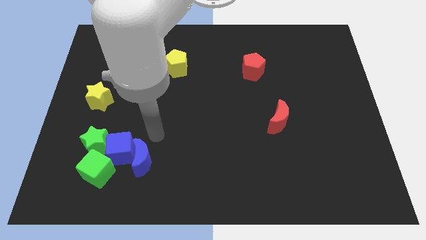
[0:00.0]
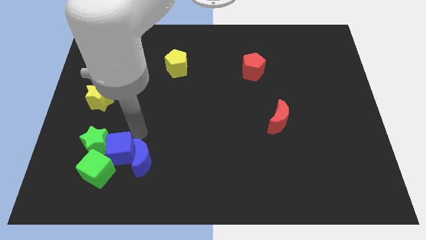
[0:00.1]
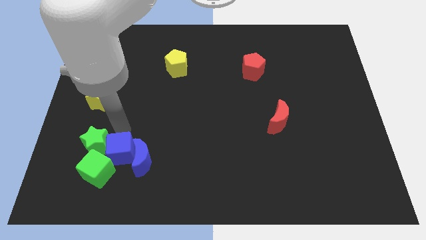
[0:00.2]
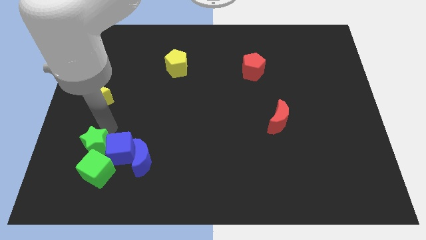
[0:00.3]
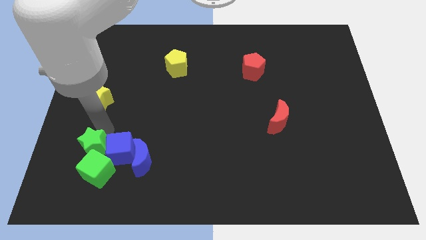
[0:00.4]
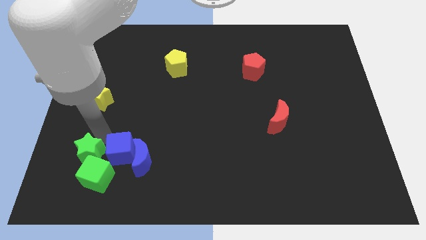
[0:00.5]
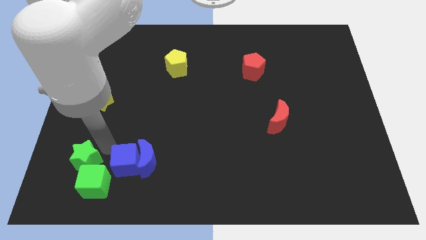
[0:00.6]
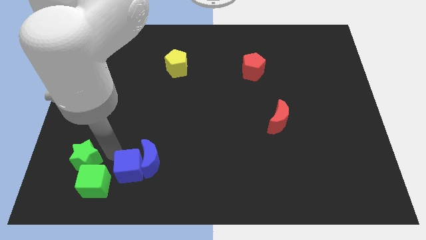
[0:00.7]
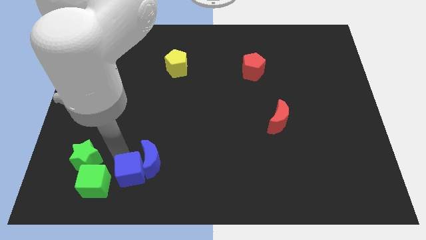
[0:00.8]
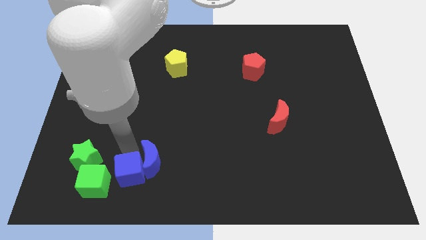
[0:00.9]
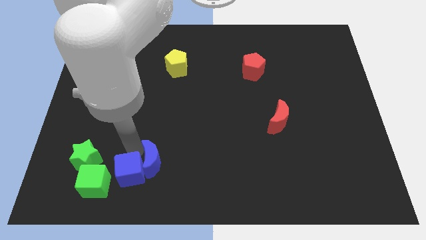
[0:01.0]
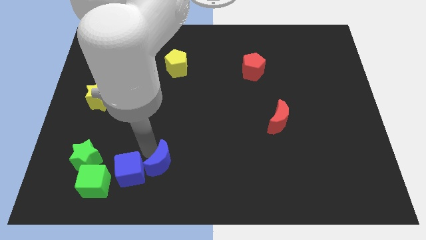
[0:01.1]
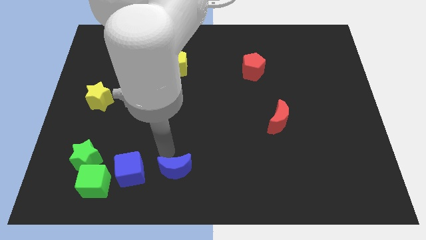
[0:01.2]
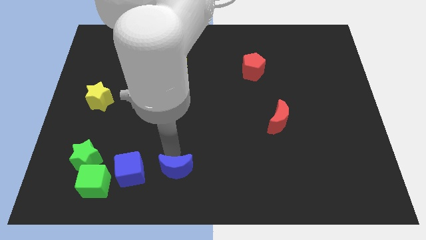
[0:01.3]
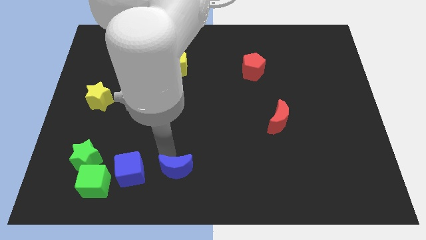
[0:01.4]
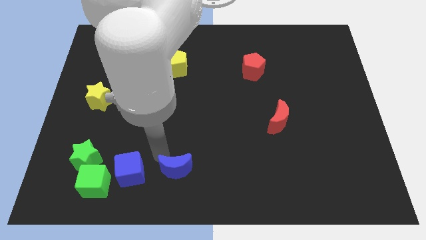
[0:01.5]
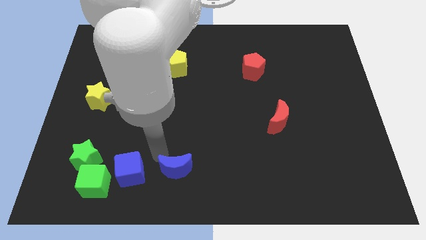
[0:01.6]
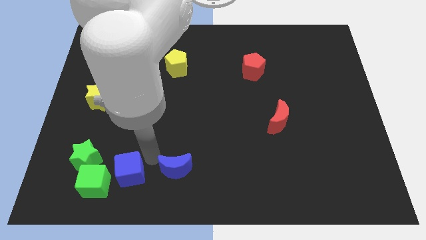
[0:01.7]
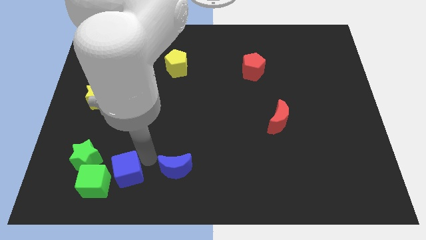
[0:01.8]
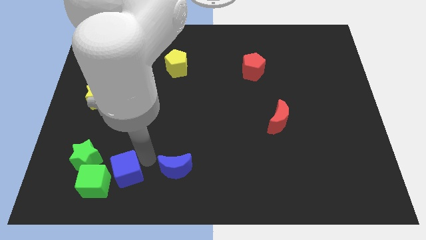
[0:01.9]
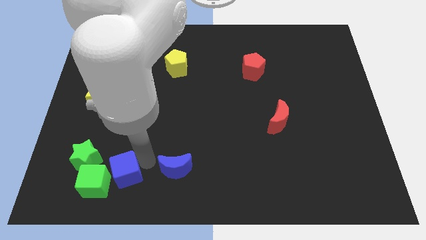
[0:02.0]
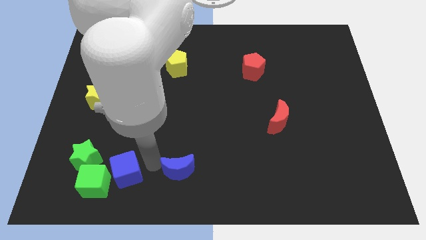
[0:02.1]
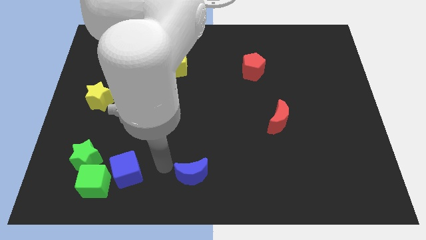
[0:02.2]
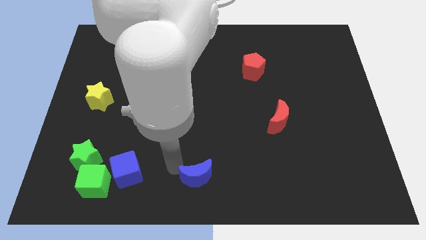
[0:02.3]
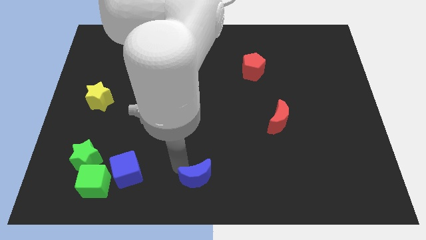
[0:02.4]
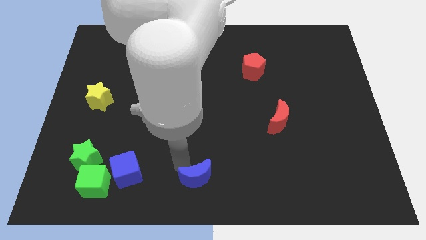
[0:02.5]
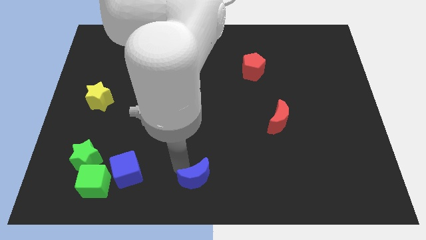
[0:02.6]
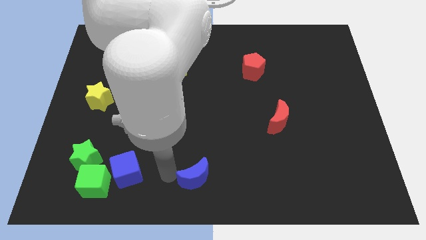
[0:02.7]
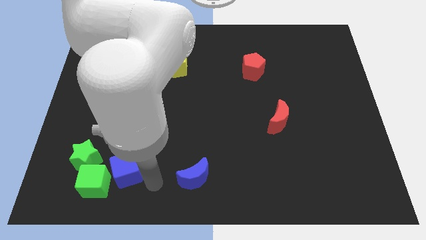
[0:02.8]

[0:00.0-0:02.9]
move the blue crescent to the bottom center of the board

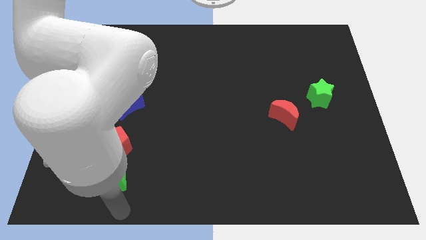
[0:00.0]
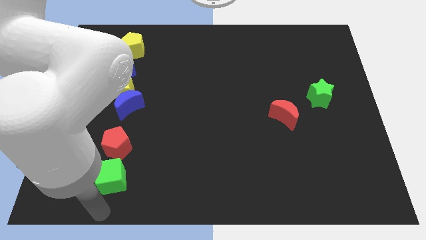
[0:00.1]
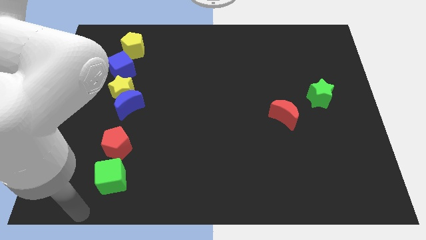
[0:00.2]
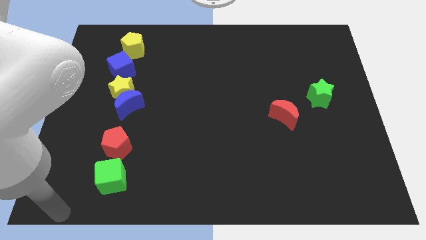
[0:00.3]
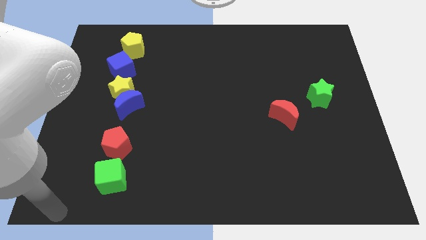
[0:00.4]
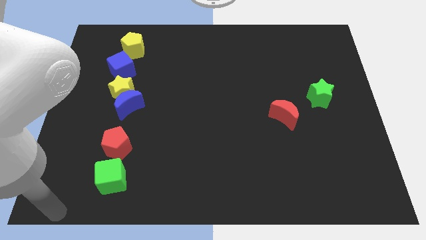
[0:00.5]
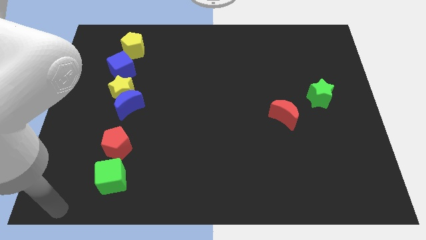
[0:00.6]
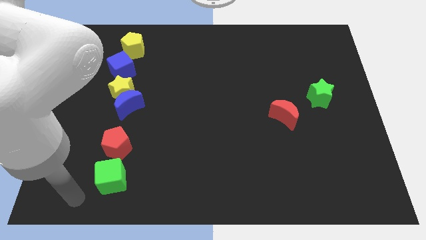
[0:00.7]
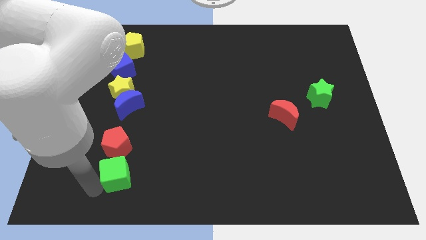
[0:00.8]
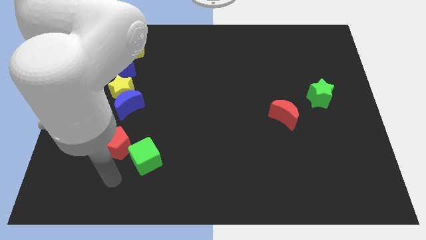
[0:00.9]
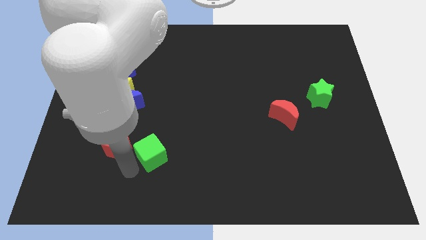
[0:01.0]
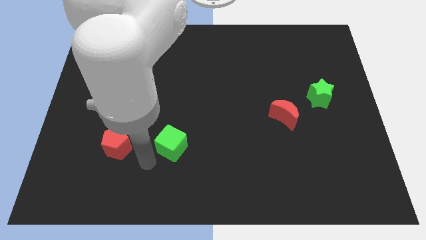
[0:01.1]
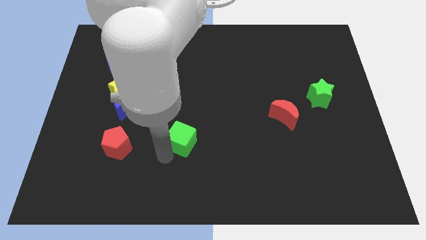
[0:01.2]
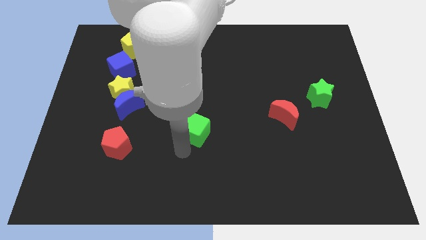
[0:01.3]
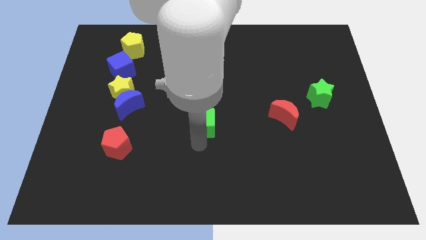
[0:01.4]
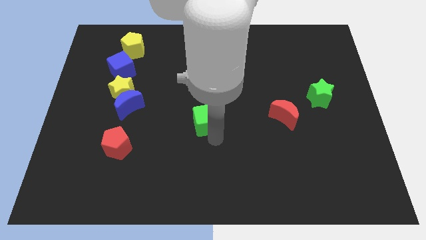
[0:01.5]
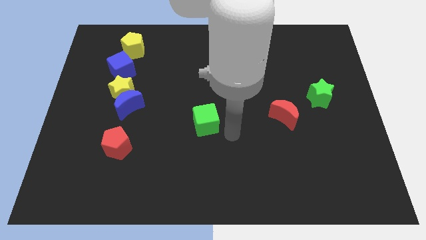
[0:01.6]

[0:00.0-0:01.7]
push the green cube towards the center of the board

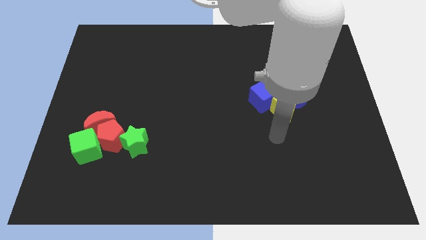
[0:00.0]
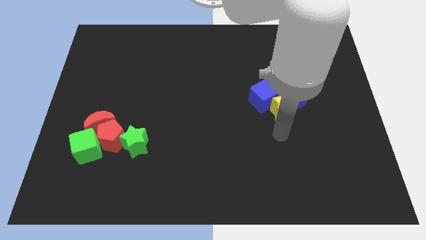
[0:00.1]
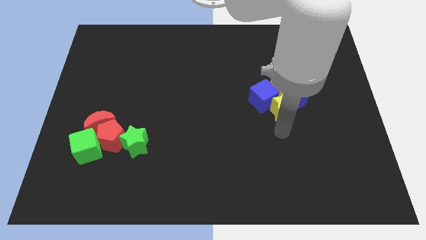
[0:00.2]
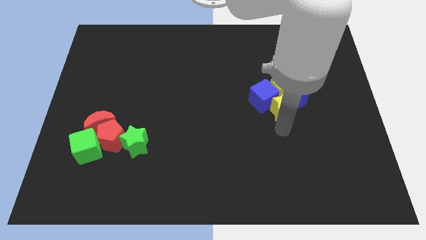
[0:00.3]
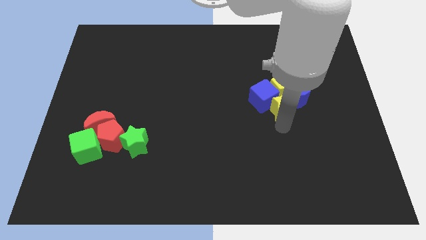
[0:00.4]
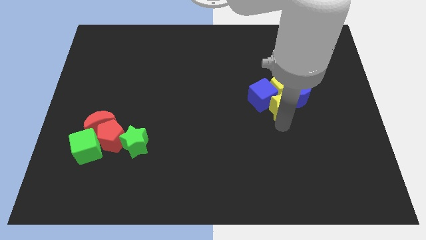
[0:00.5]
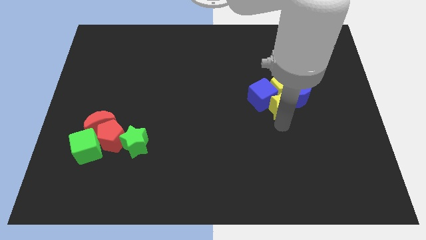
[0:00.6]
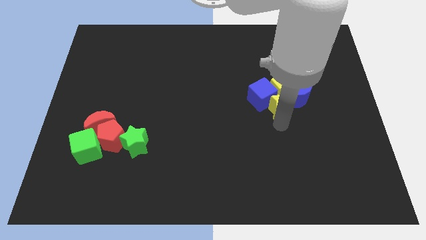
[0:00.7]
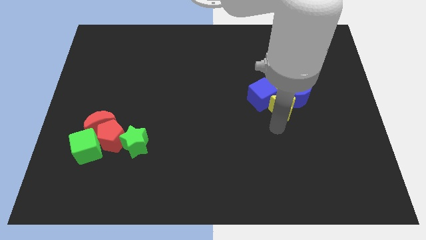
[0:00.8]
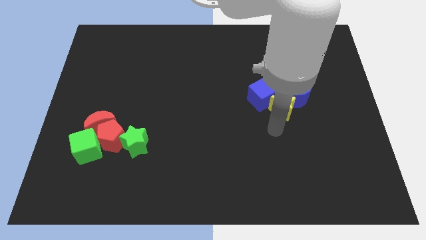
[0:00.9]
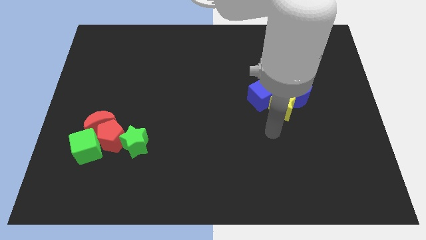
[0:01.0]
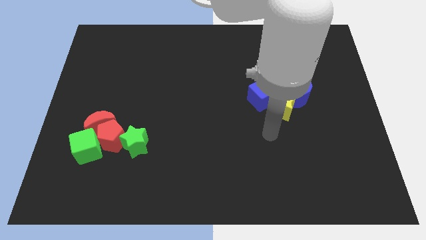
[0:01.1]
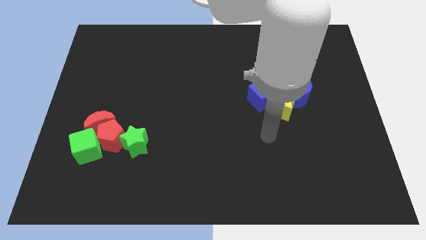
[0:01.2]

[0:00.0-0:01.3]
push the yellow star into the blue cube slightly

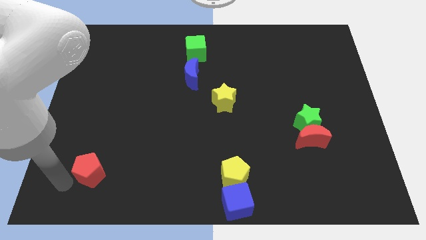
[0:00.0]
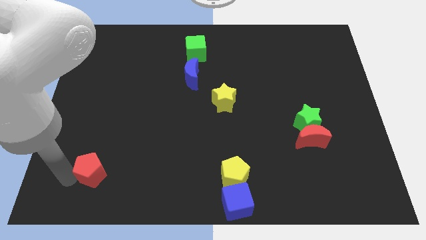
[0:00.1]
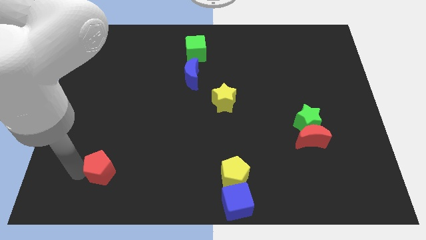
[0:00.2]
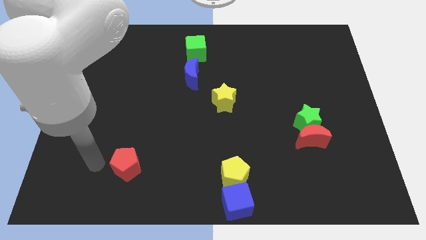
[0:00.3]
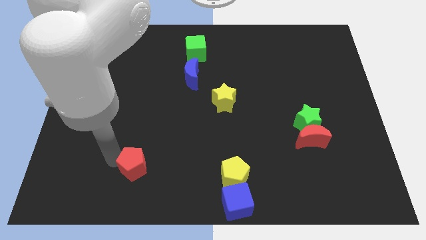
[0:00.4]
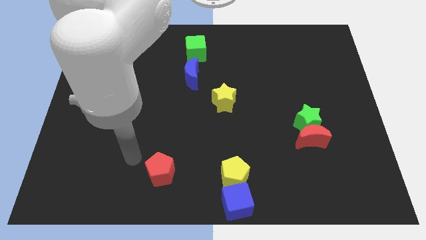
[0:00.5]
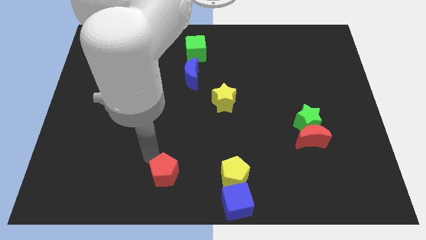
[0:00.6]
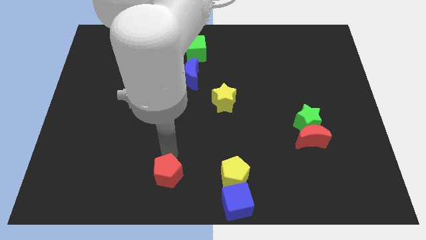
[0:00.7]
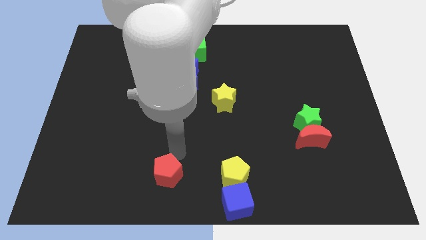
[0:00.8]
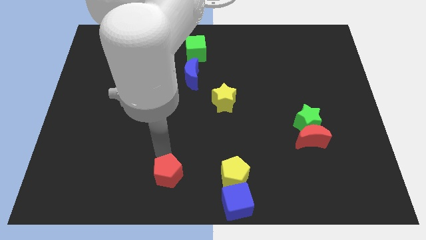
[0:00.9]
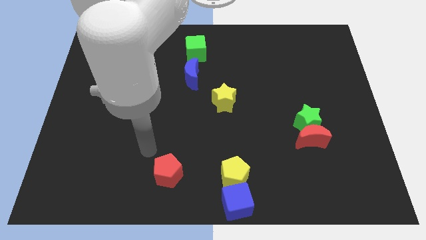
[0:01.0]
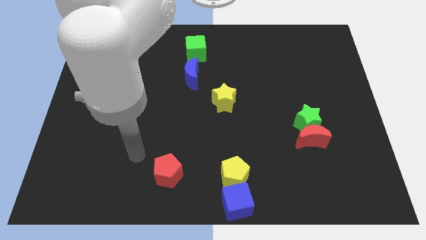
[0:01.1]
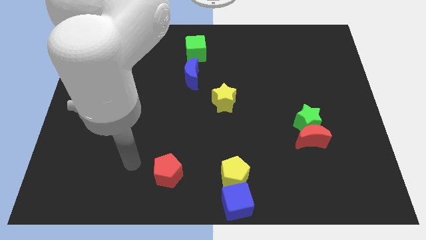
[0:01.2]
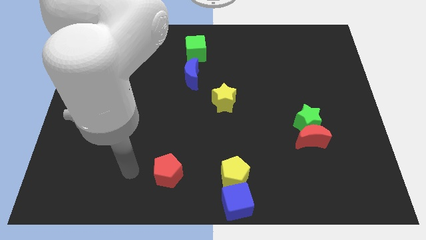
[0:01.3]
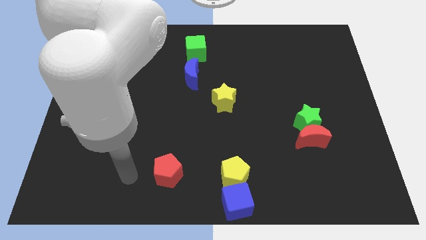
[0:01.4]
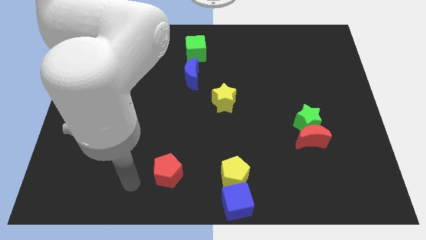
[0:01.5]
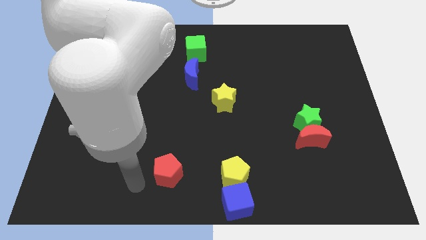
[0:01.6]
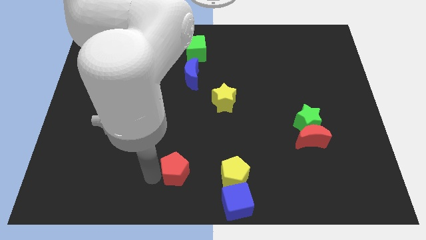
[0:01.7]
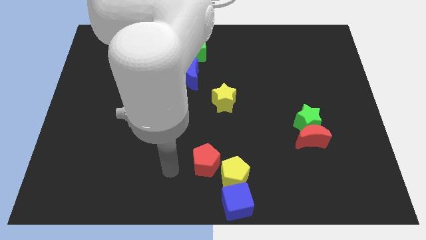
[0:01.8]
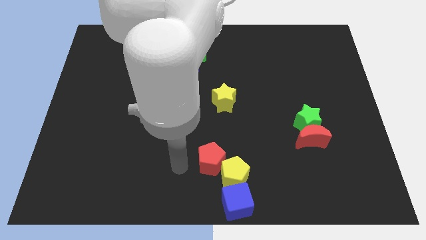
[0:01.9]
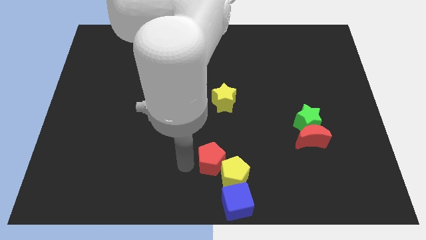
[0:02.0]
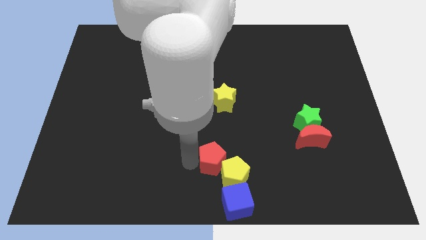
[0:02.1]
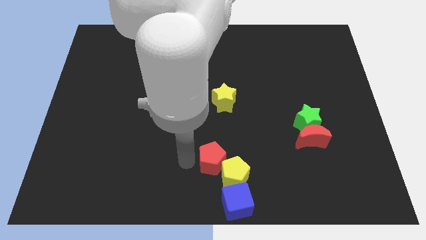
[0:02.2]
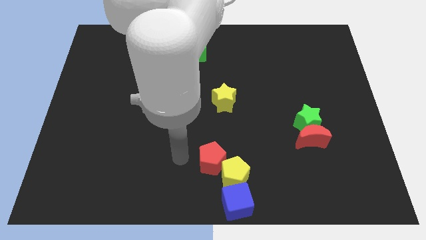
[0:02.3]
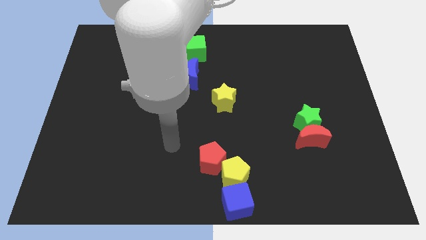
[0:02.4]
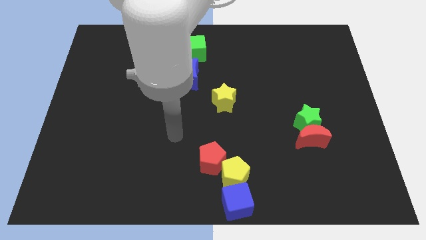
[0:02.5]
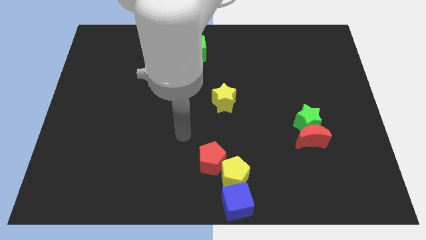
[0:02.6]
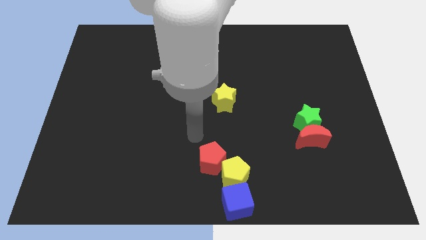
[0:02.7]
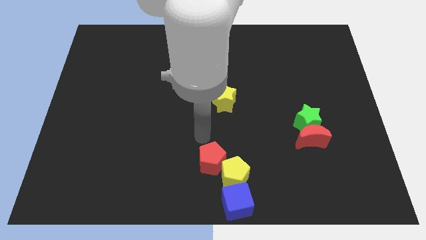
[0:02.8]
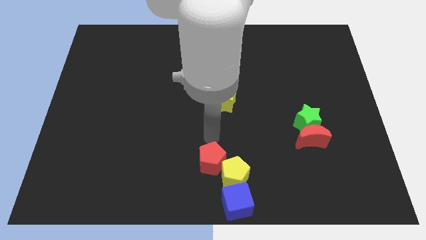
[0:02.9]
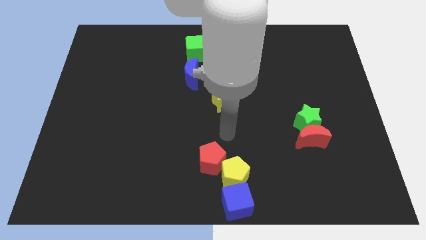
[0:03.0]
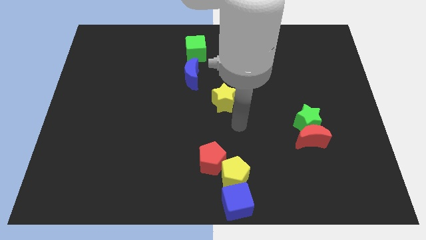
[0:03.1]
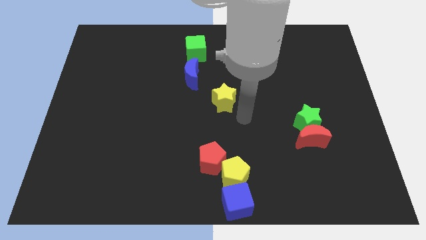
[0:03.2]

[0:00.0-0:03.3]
place the red pentagon diagonal above the yellow pentagon
